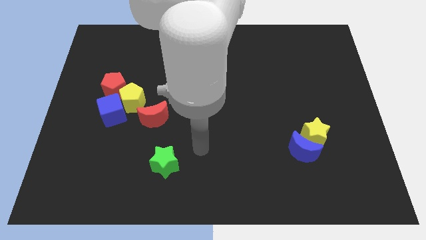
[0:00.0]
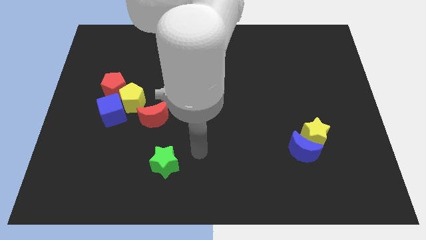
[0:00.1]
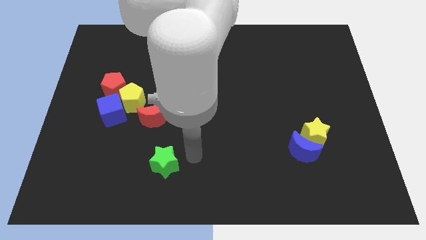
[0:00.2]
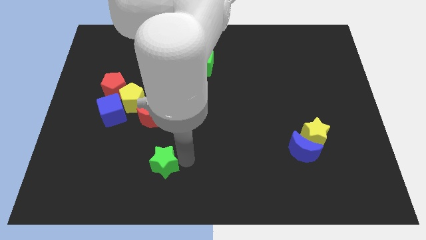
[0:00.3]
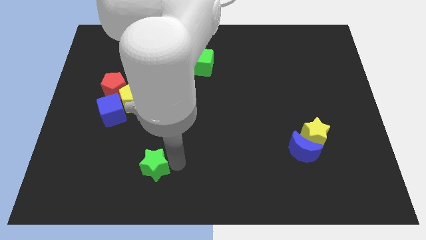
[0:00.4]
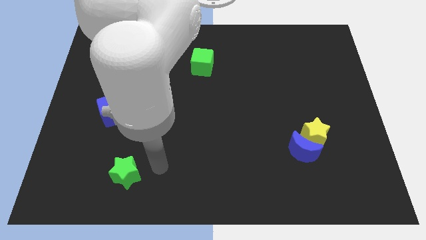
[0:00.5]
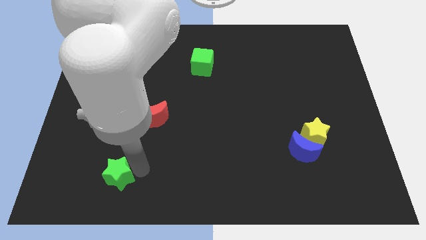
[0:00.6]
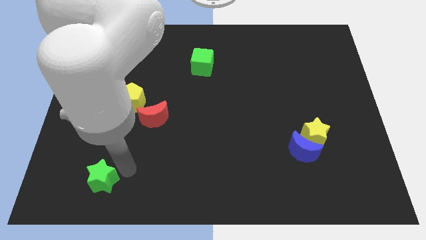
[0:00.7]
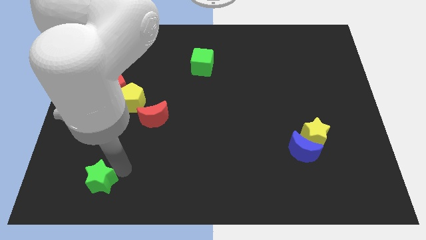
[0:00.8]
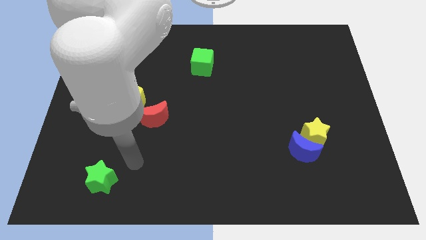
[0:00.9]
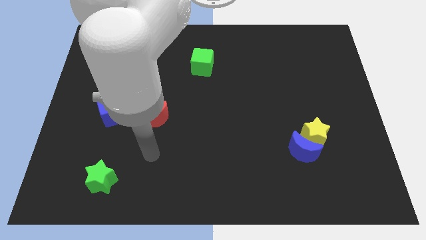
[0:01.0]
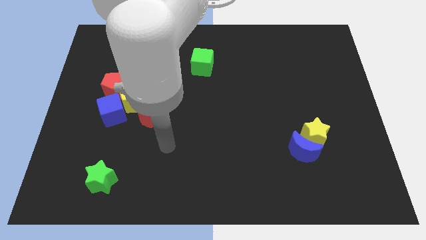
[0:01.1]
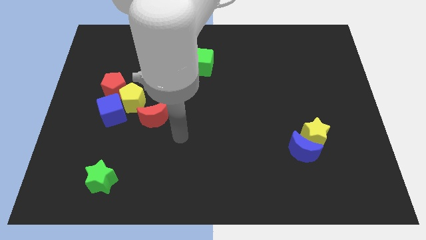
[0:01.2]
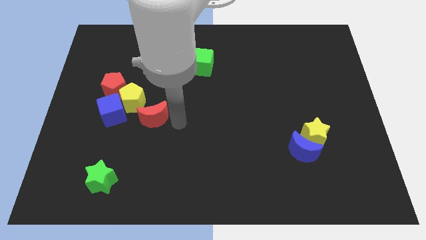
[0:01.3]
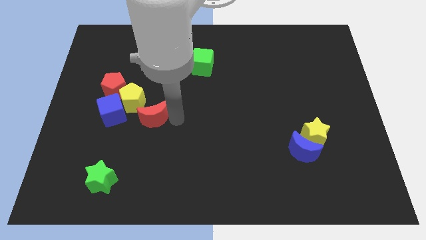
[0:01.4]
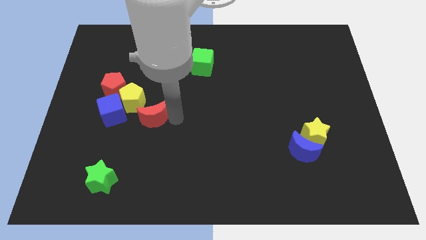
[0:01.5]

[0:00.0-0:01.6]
move the green star towards the bottom left

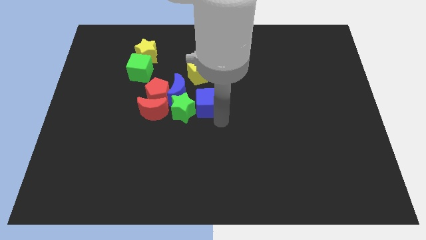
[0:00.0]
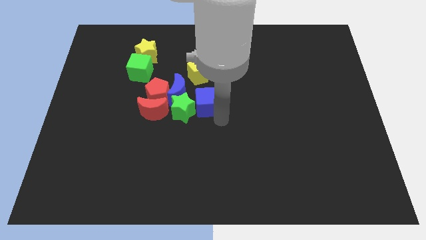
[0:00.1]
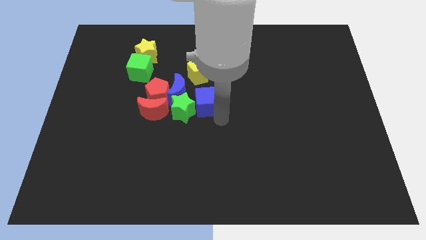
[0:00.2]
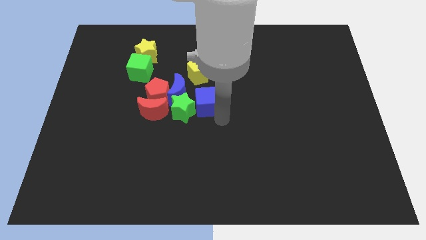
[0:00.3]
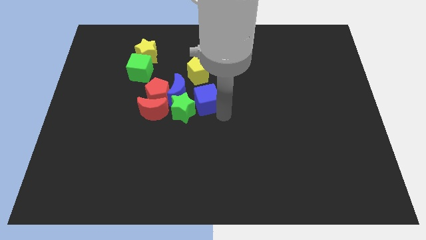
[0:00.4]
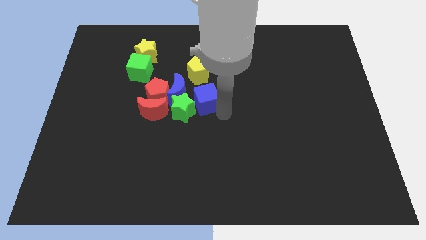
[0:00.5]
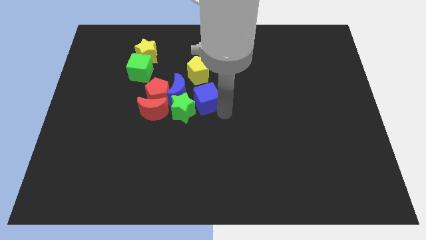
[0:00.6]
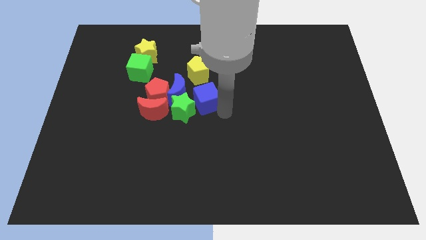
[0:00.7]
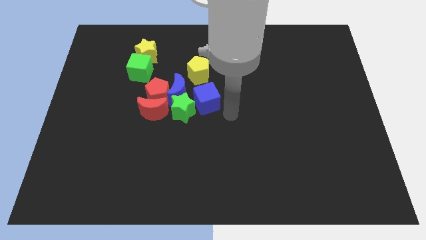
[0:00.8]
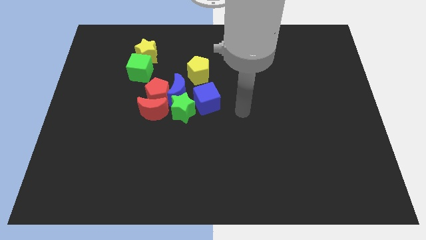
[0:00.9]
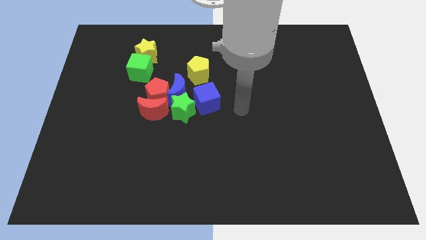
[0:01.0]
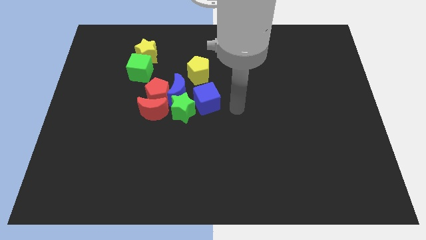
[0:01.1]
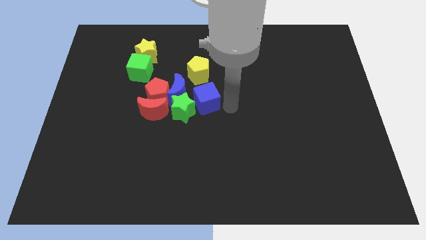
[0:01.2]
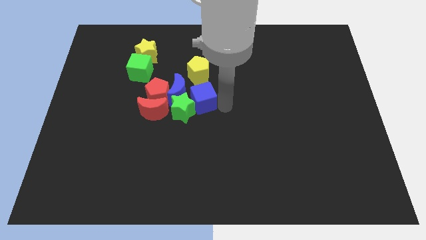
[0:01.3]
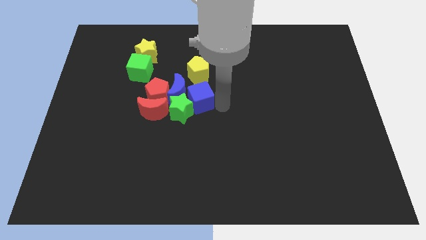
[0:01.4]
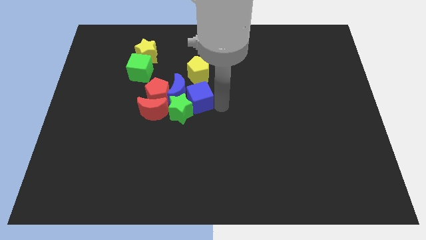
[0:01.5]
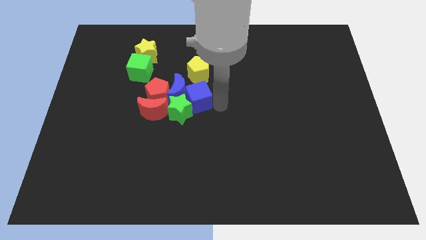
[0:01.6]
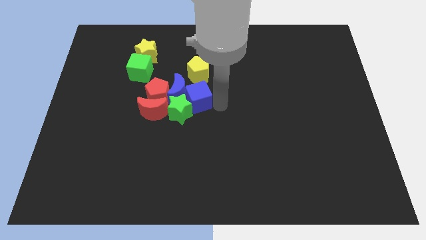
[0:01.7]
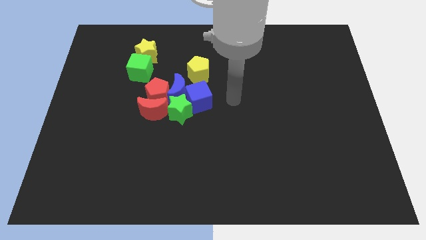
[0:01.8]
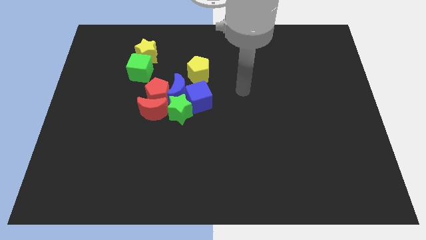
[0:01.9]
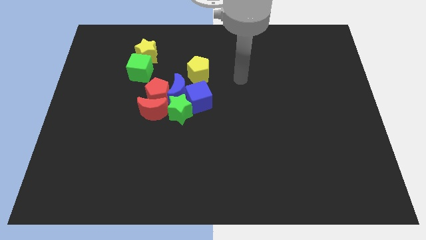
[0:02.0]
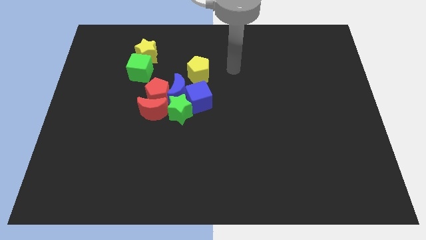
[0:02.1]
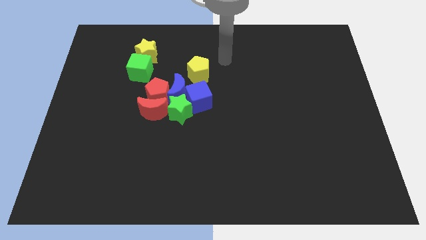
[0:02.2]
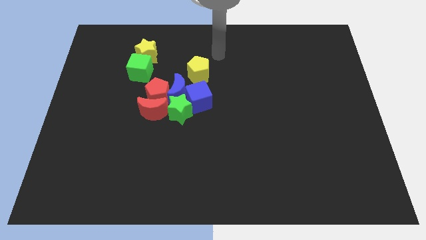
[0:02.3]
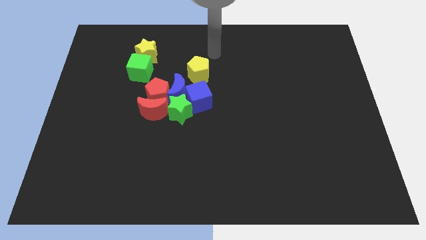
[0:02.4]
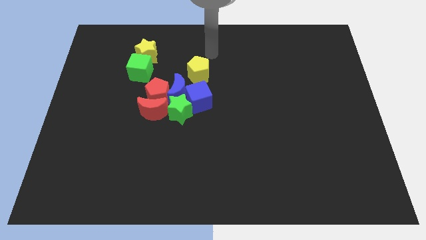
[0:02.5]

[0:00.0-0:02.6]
push the blue cube into green star

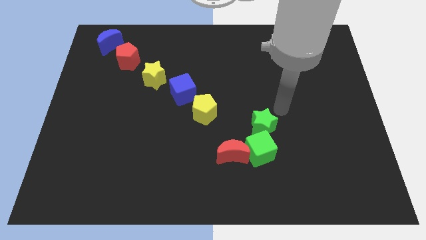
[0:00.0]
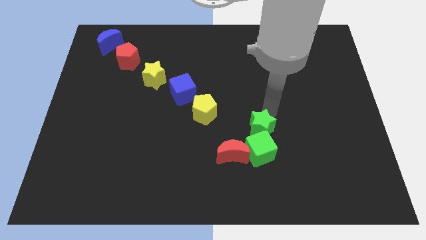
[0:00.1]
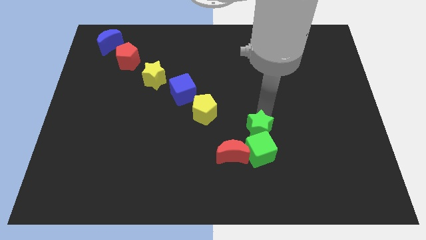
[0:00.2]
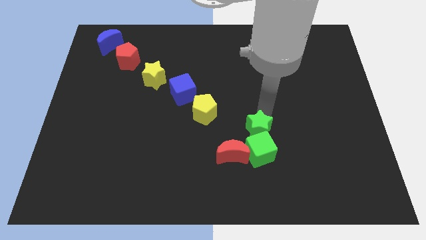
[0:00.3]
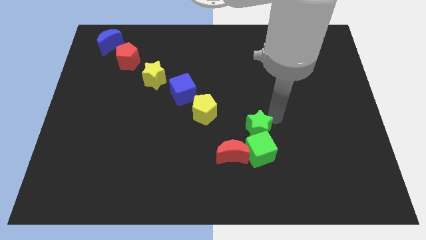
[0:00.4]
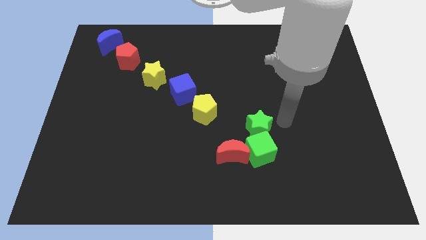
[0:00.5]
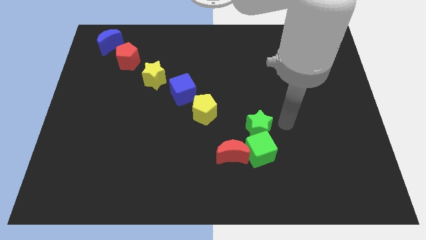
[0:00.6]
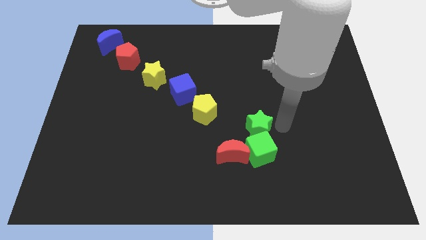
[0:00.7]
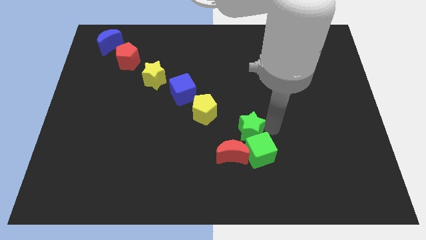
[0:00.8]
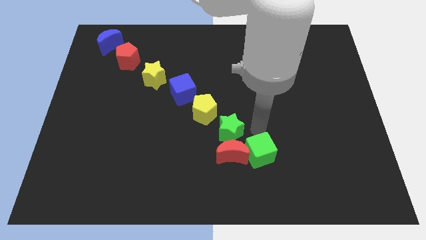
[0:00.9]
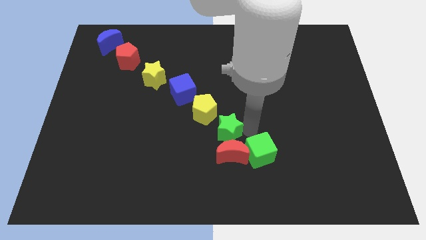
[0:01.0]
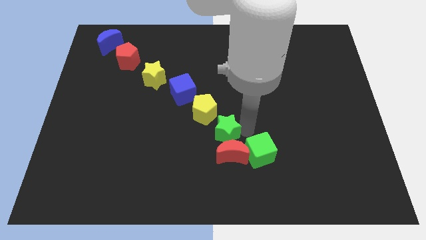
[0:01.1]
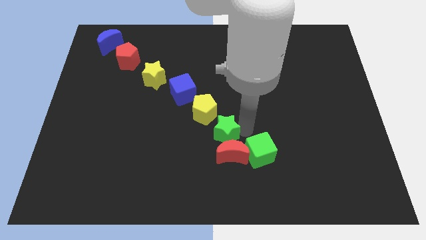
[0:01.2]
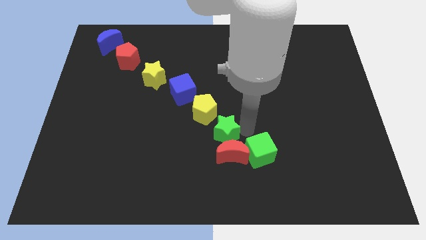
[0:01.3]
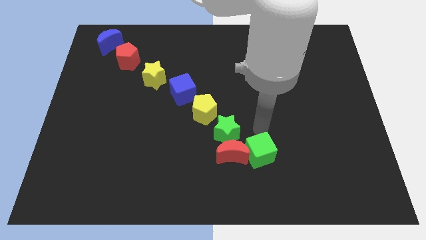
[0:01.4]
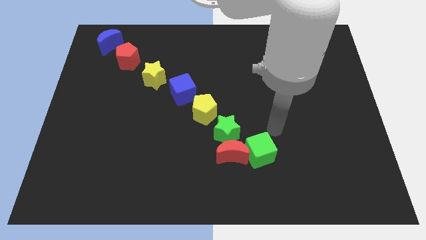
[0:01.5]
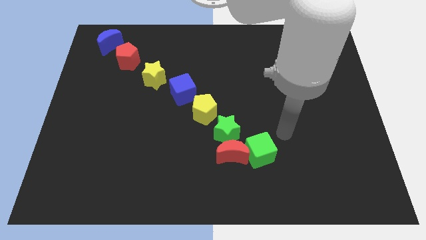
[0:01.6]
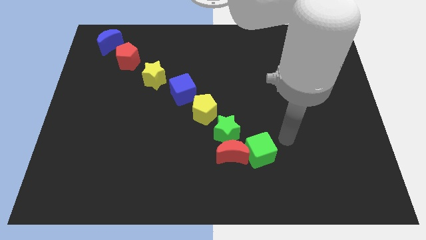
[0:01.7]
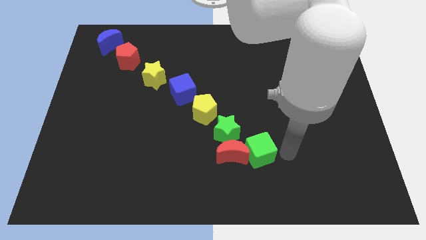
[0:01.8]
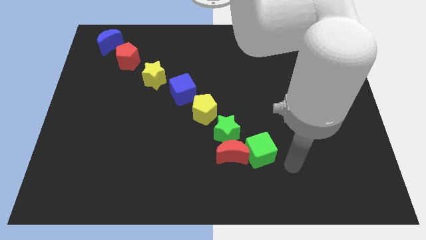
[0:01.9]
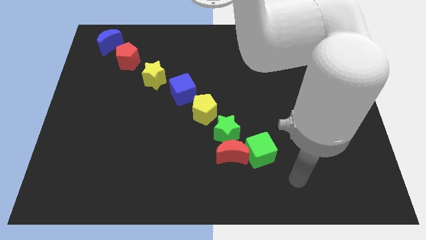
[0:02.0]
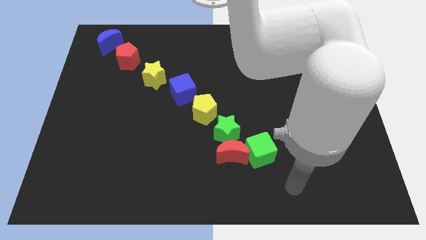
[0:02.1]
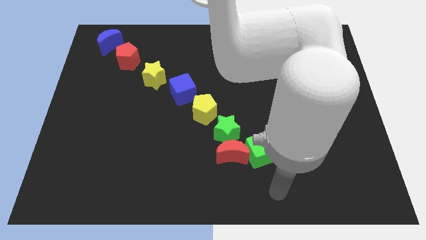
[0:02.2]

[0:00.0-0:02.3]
place green star between yellow pentagon and green cube

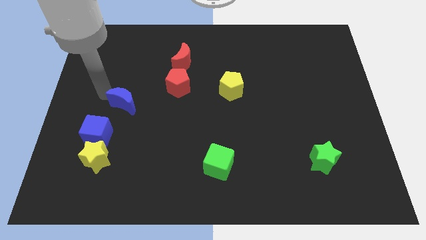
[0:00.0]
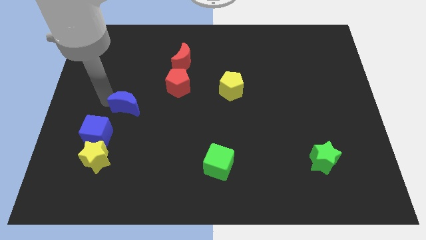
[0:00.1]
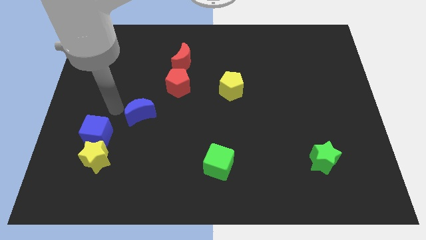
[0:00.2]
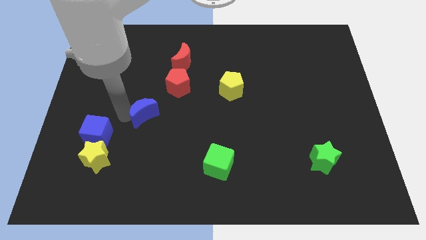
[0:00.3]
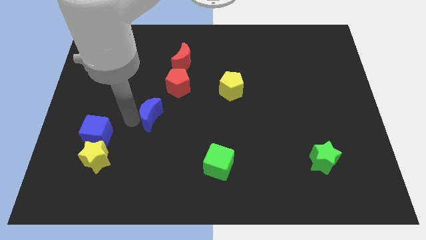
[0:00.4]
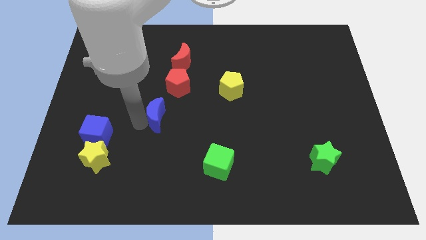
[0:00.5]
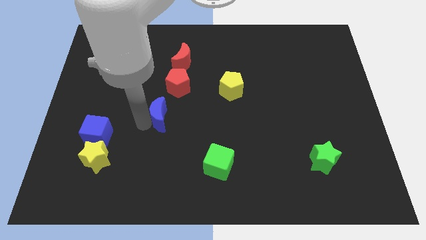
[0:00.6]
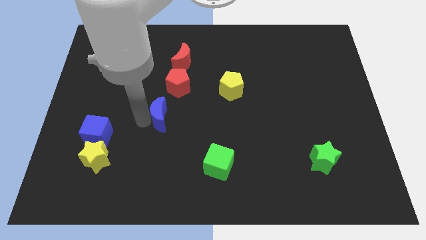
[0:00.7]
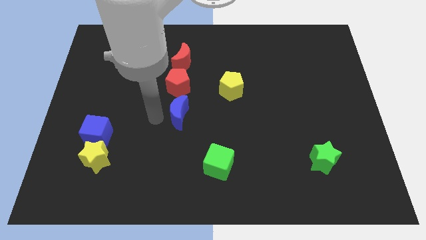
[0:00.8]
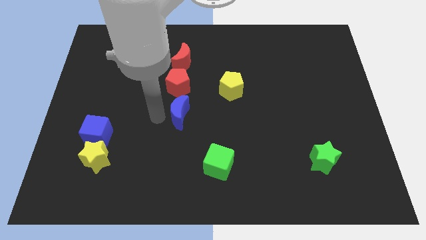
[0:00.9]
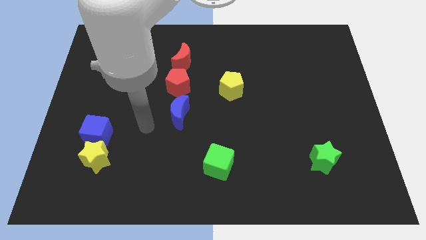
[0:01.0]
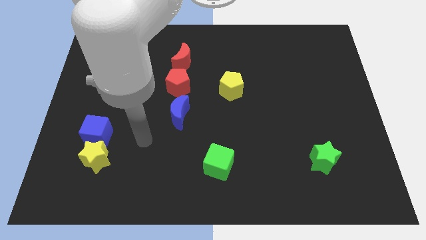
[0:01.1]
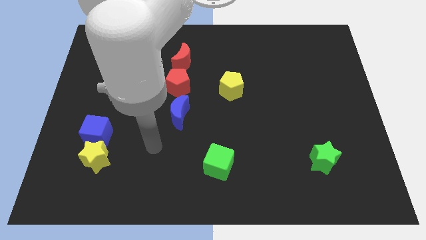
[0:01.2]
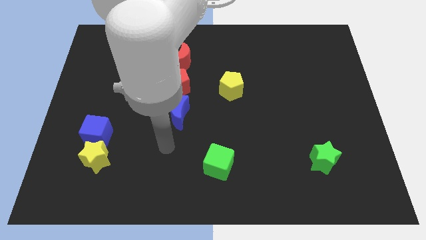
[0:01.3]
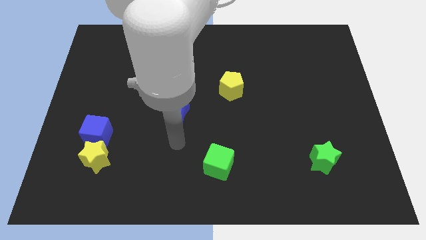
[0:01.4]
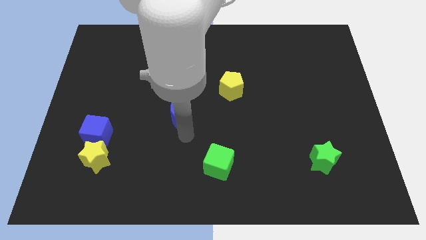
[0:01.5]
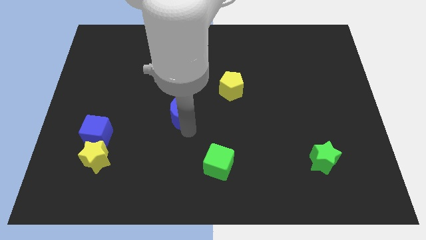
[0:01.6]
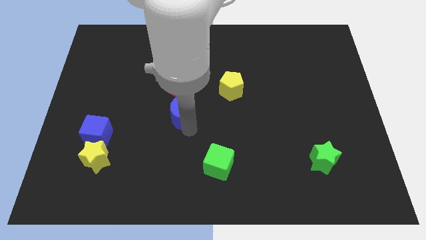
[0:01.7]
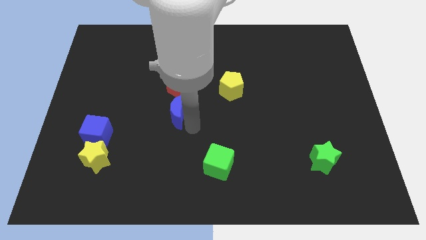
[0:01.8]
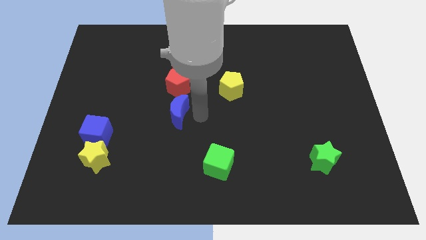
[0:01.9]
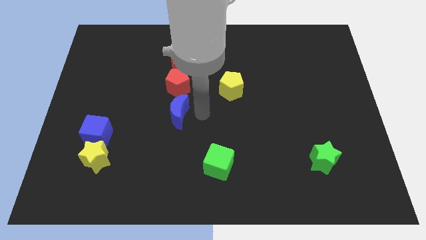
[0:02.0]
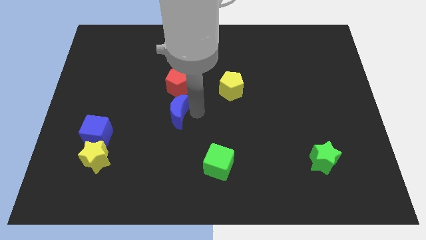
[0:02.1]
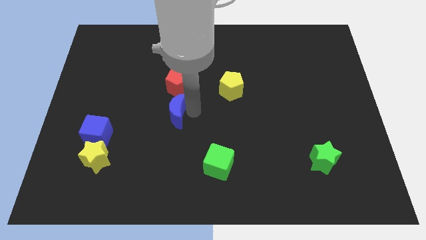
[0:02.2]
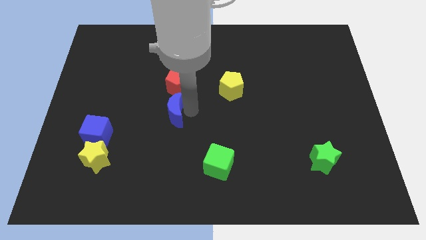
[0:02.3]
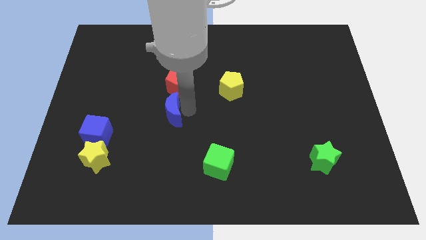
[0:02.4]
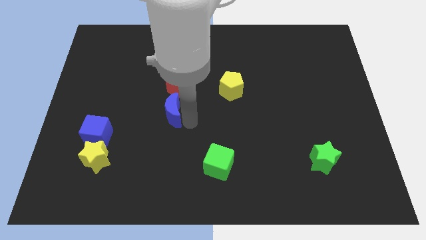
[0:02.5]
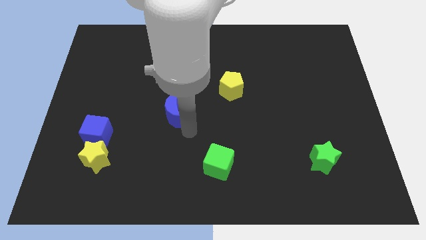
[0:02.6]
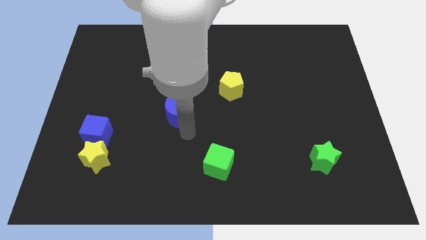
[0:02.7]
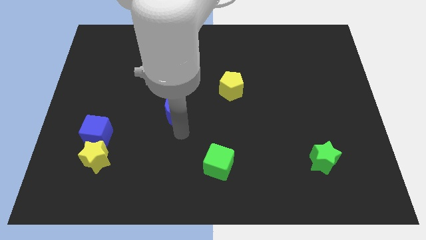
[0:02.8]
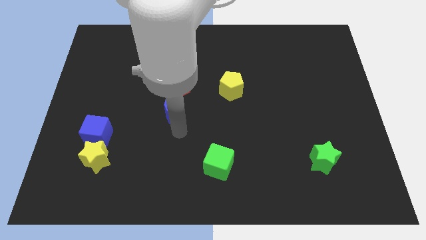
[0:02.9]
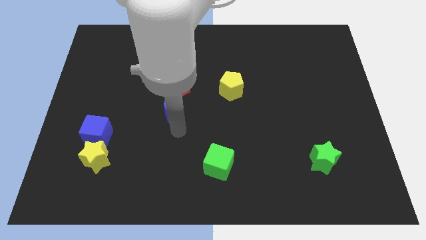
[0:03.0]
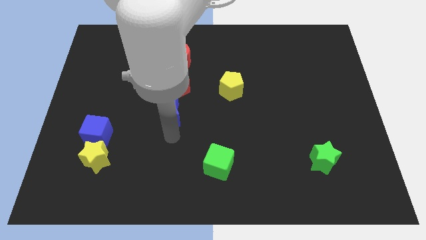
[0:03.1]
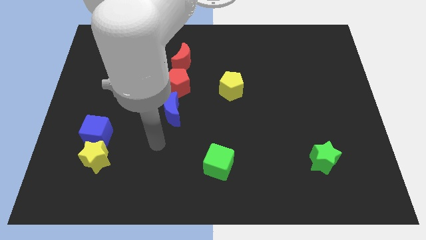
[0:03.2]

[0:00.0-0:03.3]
slide the blue moon vertically below the red pentagon
